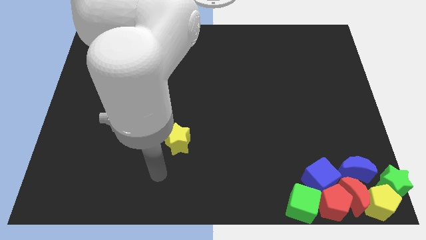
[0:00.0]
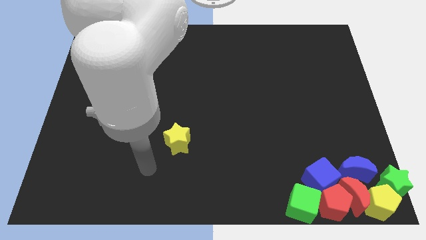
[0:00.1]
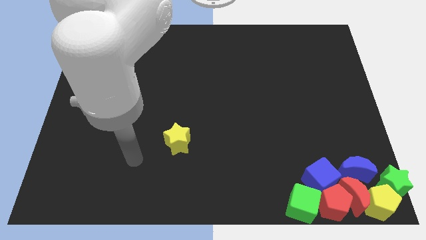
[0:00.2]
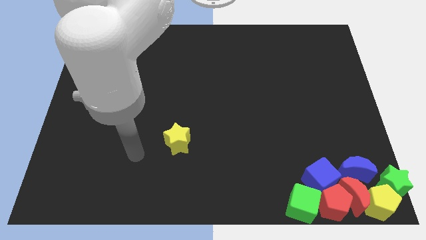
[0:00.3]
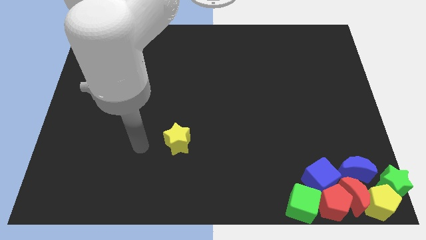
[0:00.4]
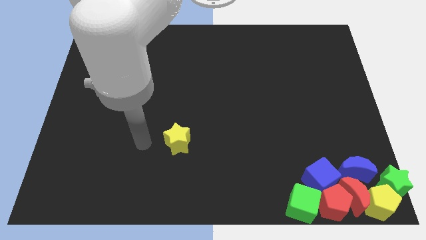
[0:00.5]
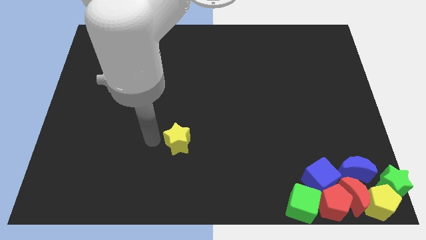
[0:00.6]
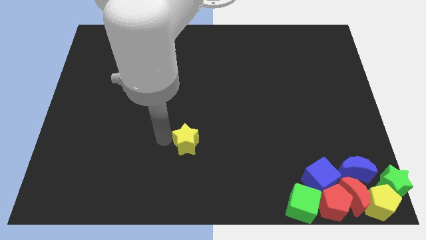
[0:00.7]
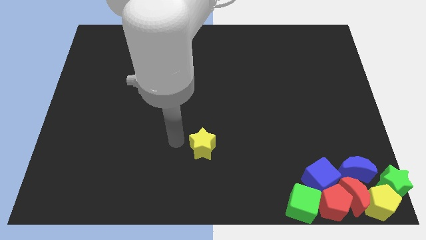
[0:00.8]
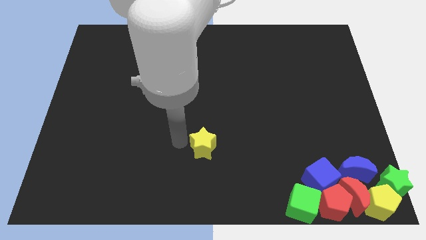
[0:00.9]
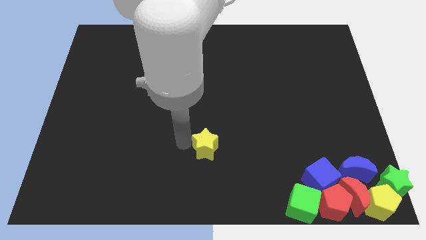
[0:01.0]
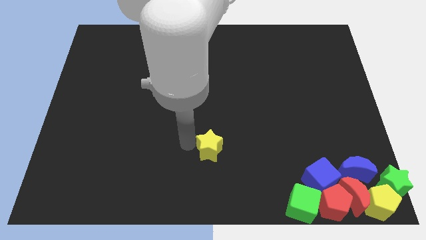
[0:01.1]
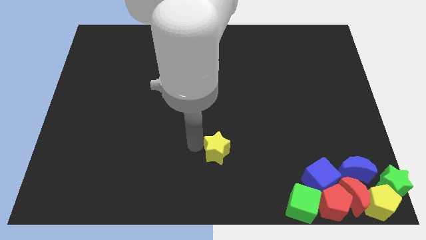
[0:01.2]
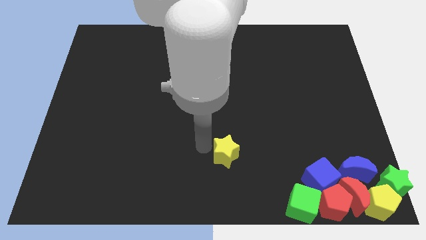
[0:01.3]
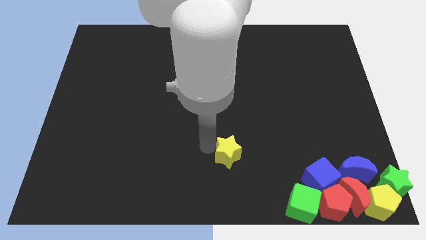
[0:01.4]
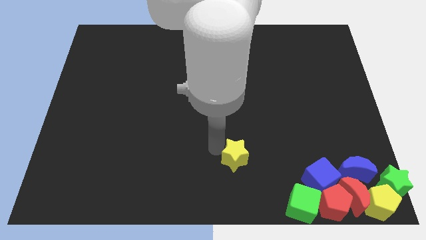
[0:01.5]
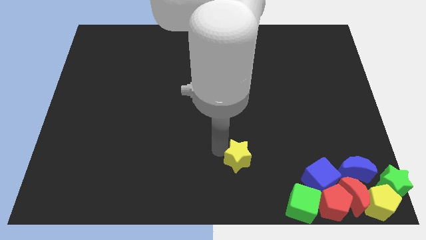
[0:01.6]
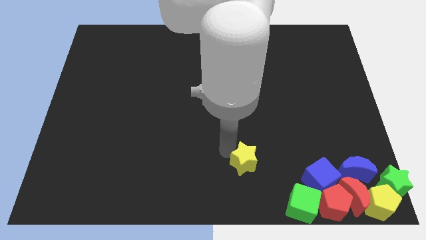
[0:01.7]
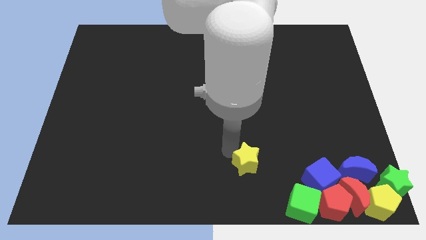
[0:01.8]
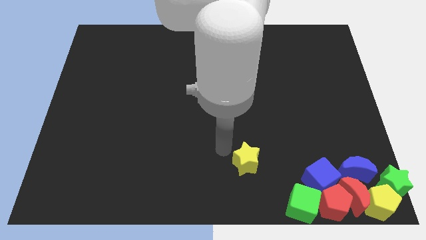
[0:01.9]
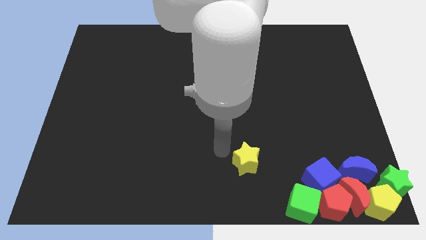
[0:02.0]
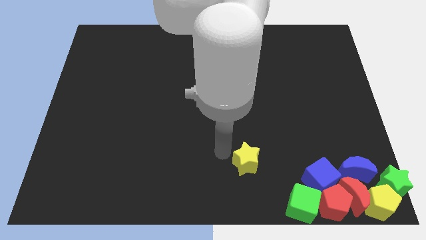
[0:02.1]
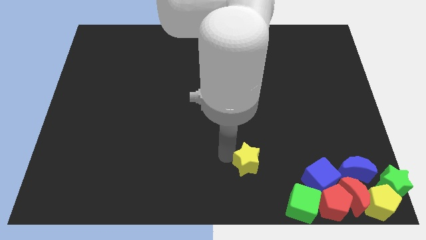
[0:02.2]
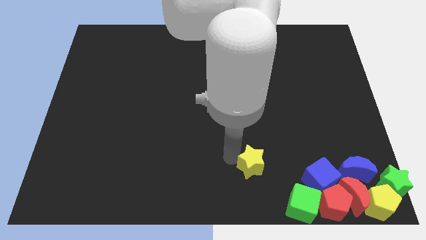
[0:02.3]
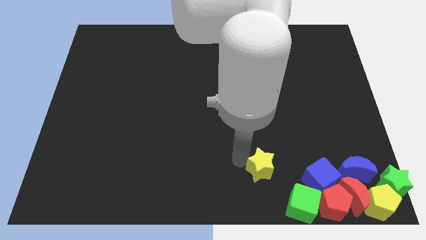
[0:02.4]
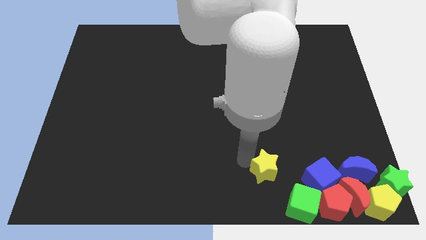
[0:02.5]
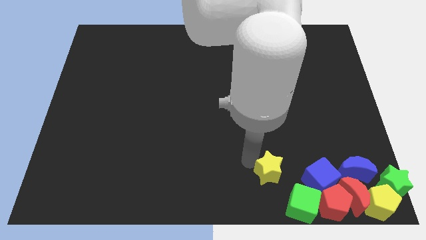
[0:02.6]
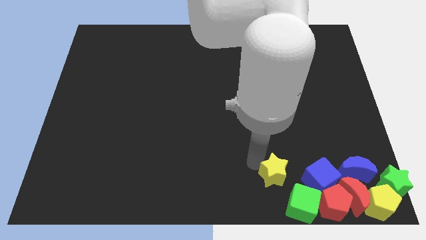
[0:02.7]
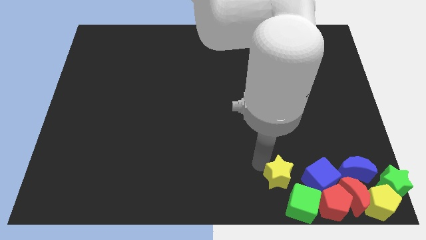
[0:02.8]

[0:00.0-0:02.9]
push yellow star towards green cube

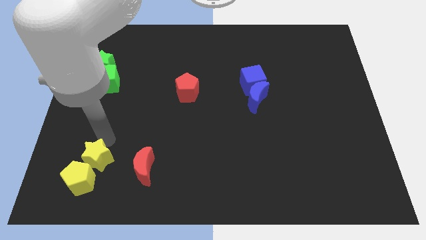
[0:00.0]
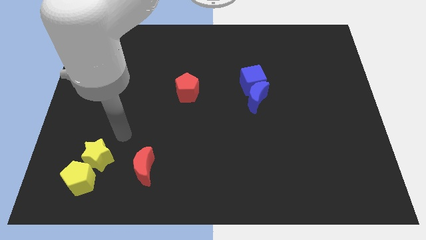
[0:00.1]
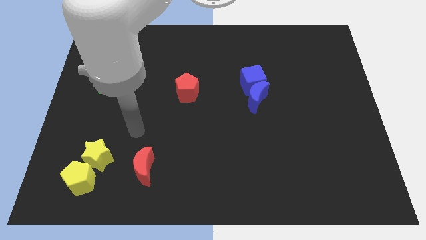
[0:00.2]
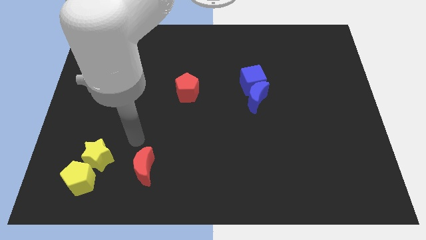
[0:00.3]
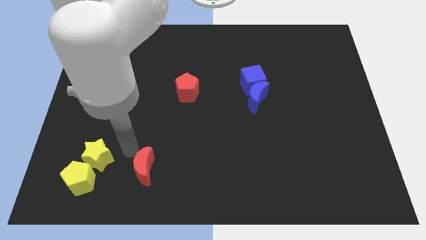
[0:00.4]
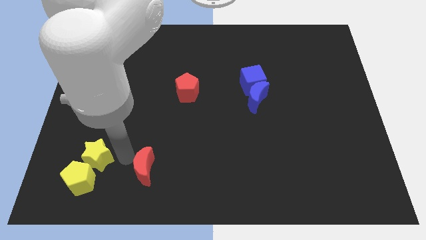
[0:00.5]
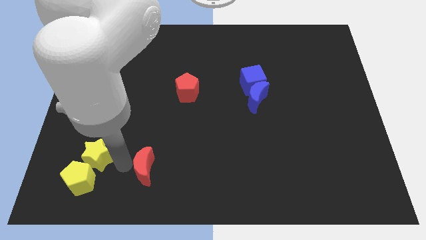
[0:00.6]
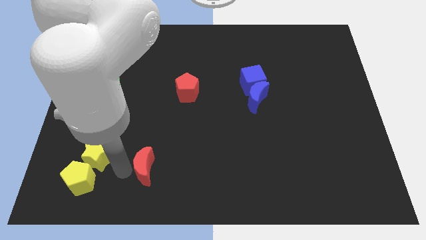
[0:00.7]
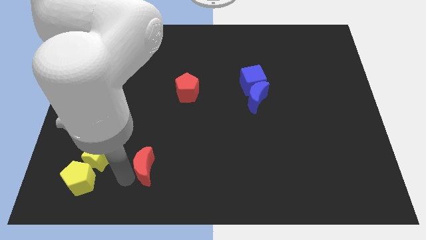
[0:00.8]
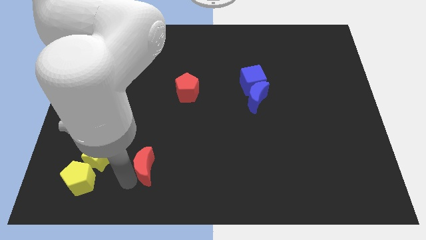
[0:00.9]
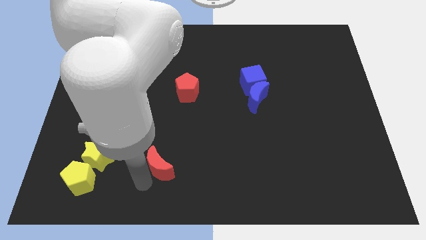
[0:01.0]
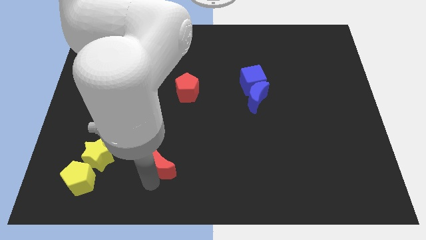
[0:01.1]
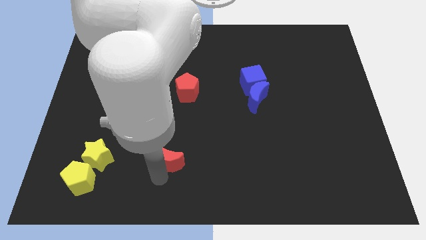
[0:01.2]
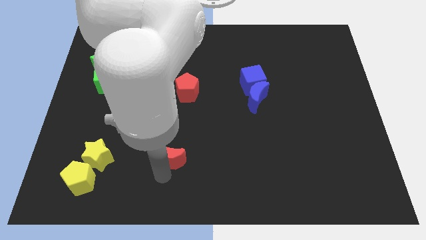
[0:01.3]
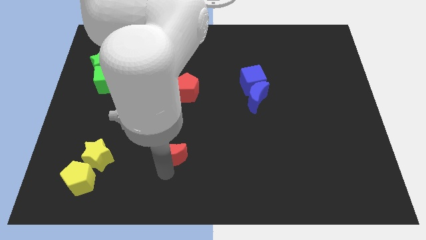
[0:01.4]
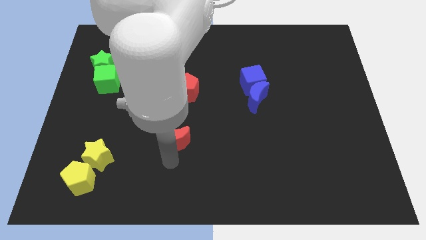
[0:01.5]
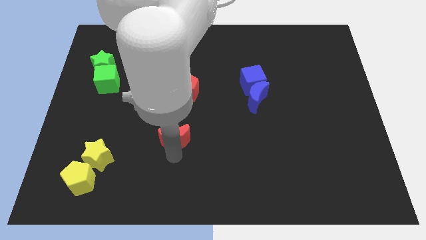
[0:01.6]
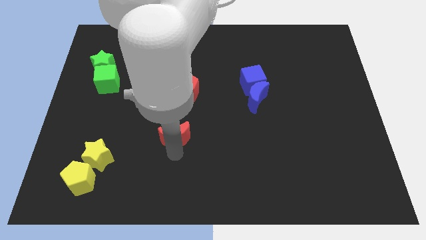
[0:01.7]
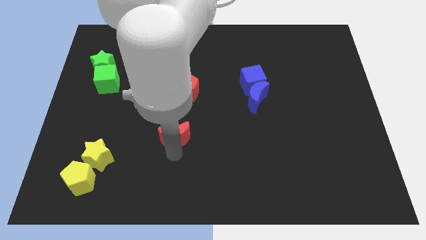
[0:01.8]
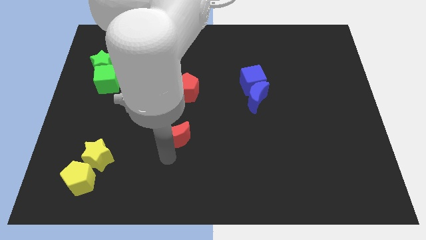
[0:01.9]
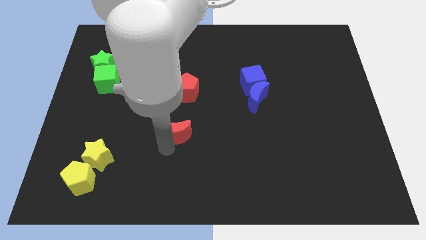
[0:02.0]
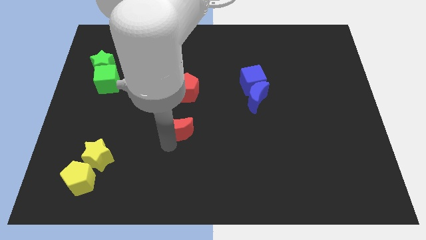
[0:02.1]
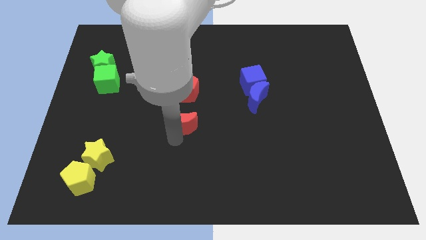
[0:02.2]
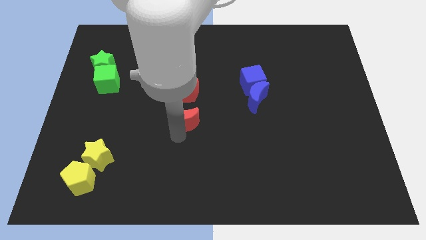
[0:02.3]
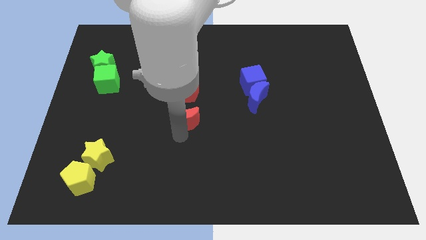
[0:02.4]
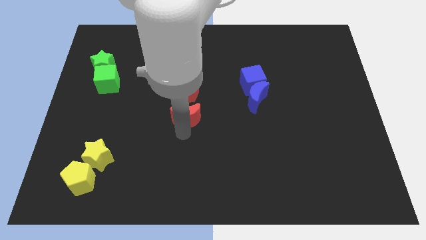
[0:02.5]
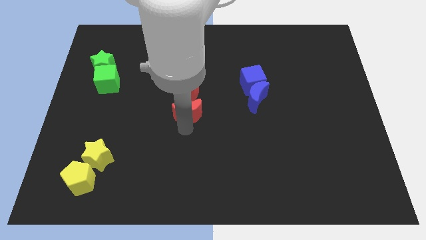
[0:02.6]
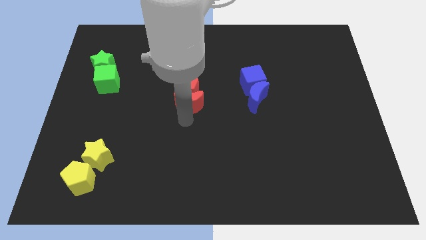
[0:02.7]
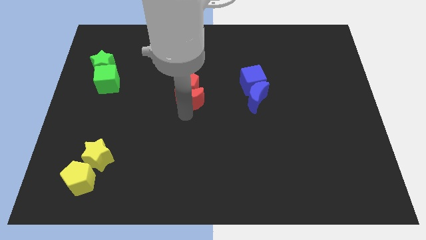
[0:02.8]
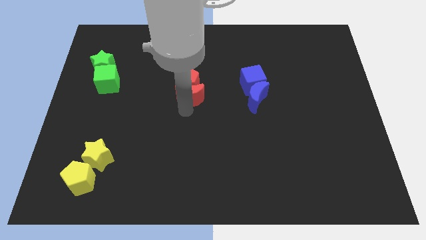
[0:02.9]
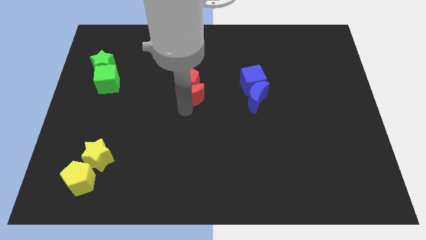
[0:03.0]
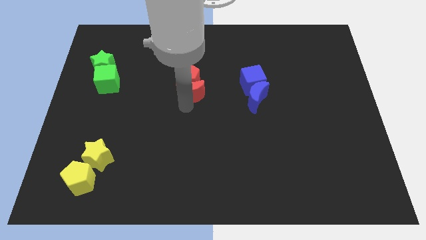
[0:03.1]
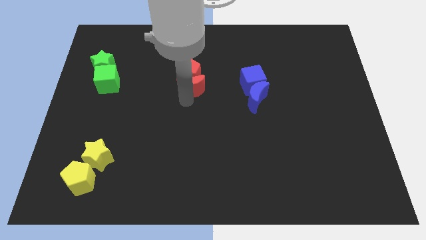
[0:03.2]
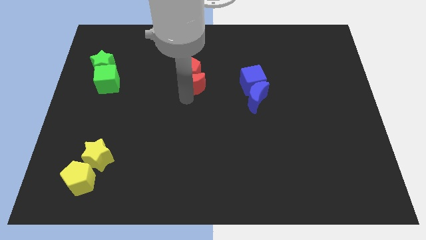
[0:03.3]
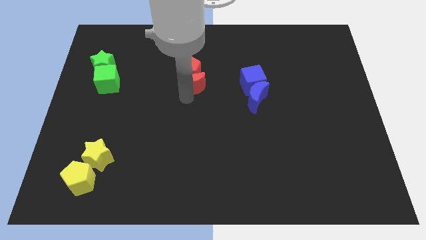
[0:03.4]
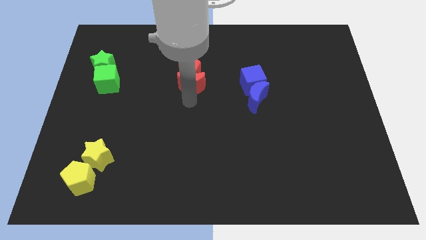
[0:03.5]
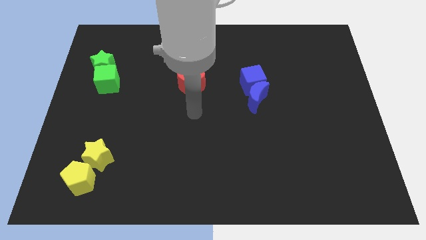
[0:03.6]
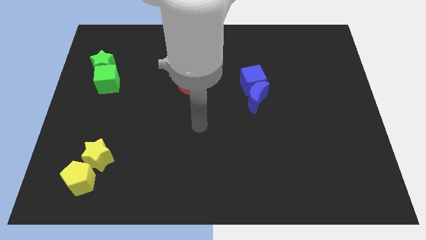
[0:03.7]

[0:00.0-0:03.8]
move the red moon into red pentagon at the center

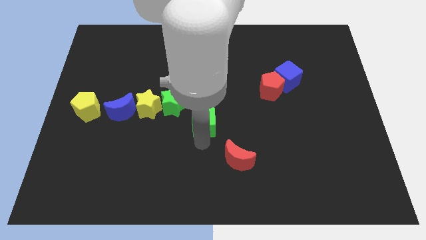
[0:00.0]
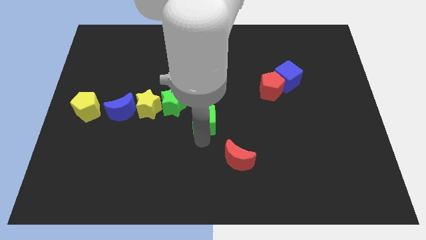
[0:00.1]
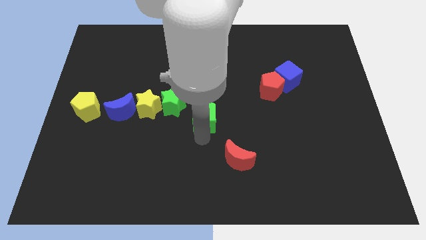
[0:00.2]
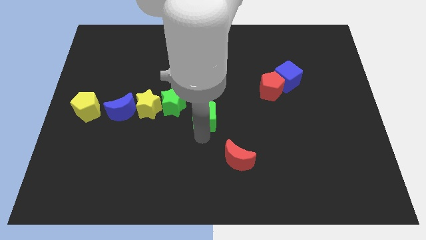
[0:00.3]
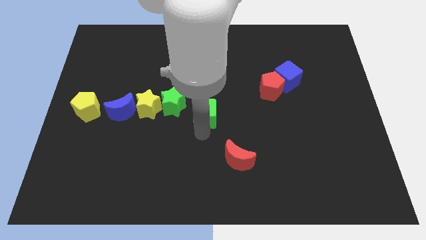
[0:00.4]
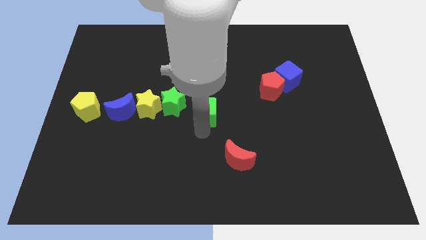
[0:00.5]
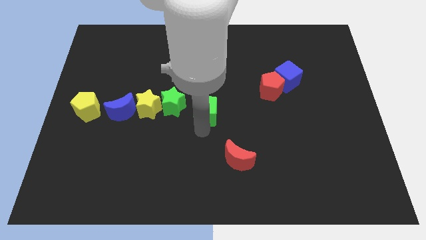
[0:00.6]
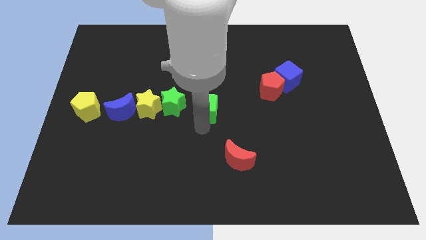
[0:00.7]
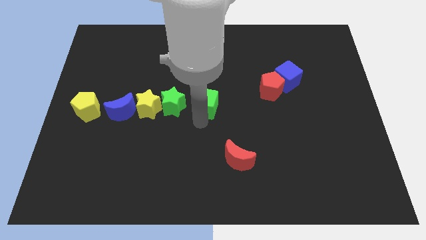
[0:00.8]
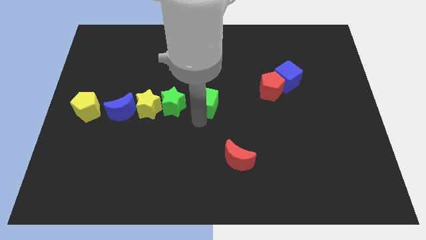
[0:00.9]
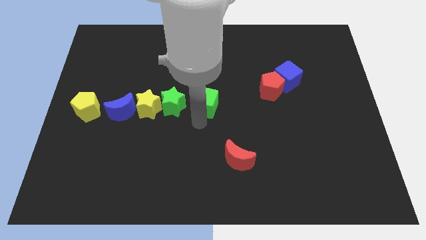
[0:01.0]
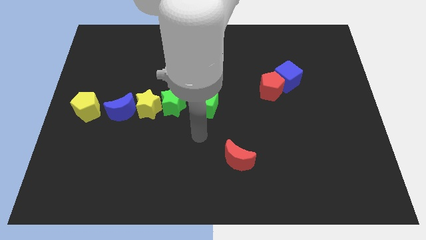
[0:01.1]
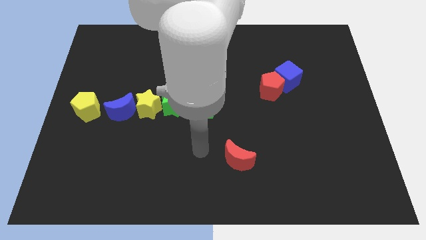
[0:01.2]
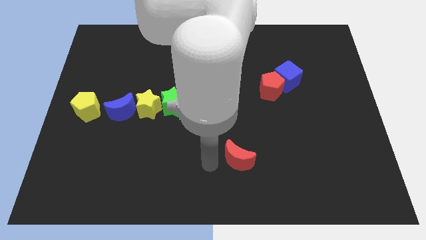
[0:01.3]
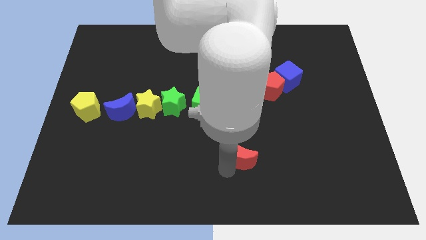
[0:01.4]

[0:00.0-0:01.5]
put the green cube to the right of the green star

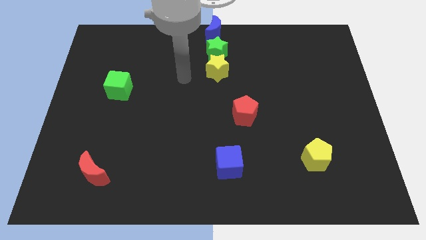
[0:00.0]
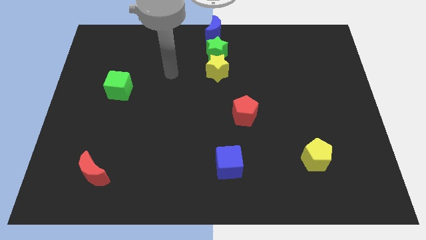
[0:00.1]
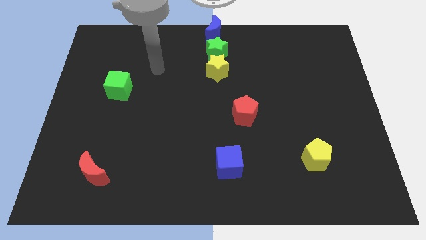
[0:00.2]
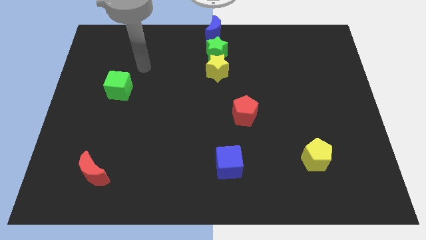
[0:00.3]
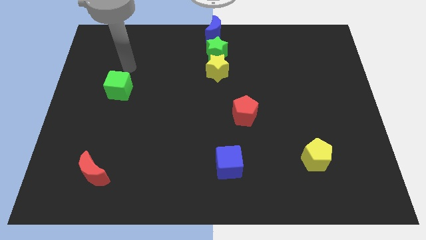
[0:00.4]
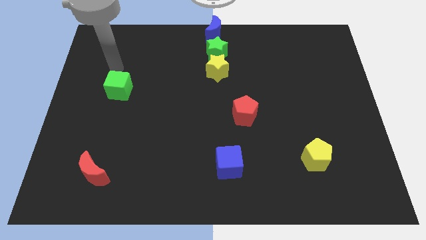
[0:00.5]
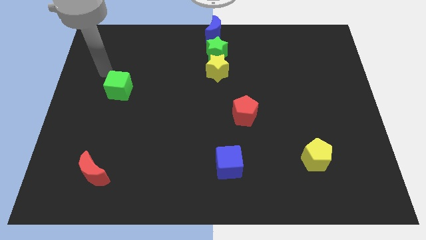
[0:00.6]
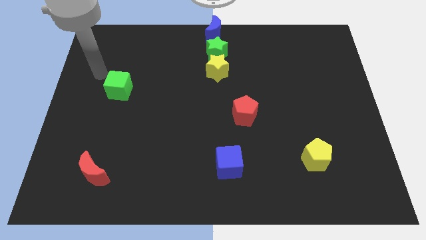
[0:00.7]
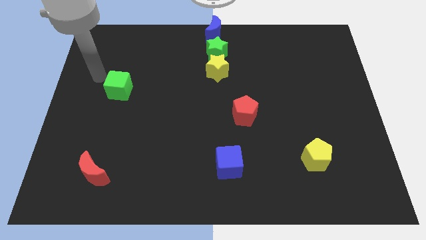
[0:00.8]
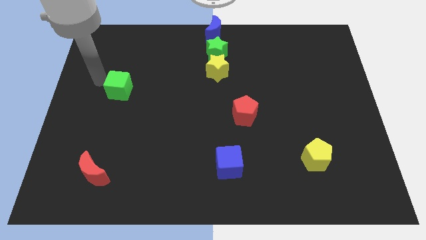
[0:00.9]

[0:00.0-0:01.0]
move the arm left to the green cube
